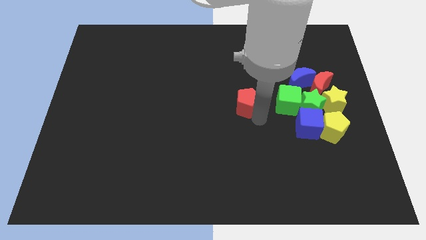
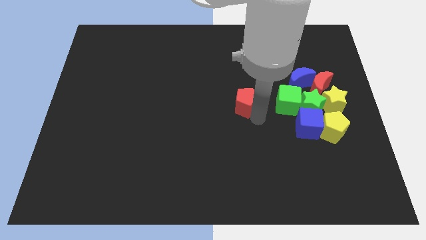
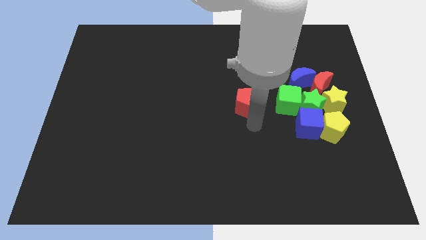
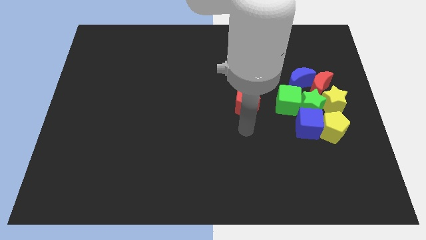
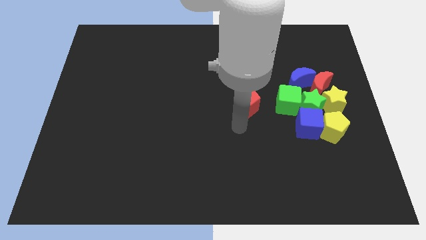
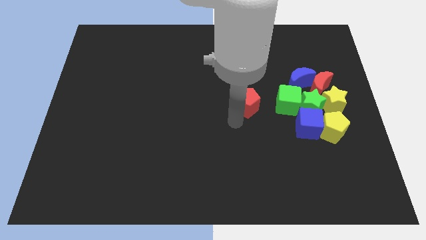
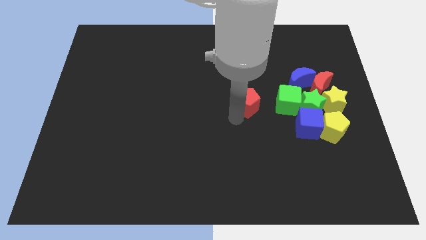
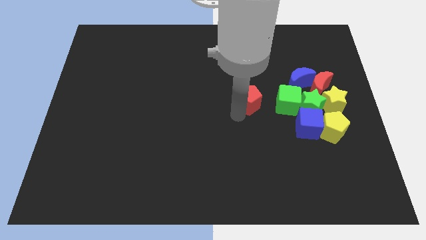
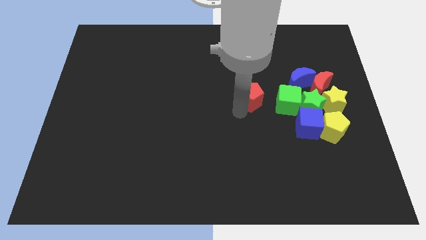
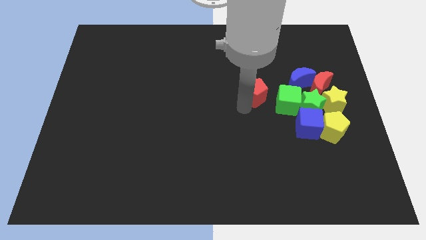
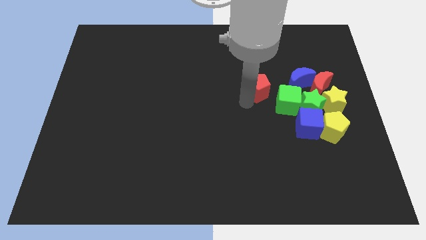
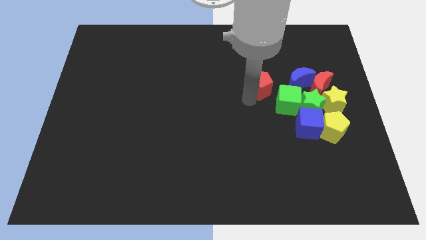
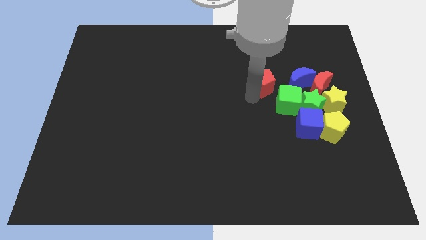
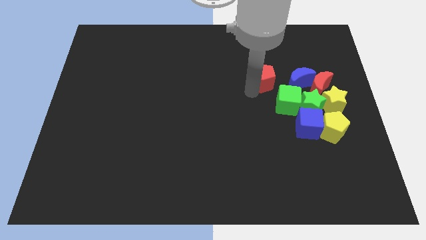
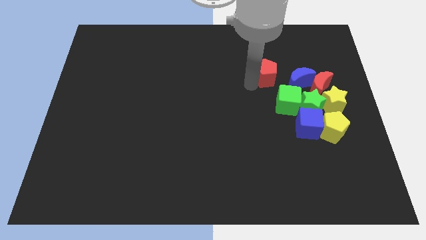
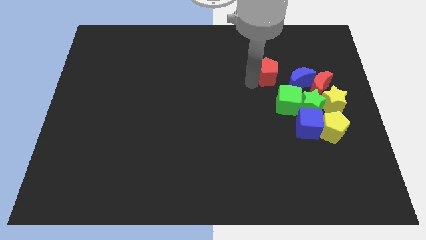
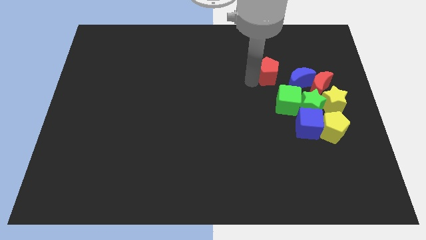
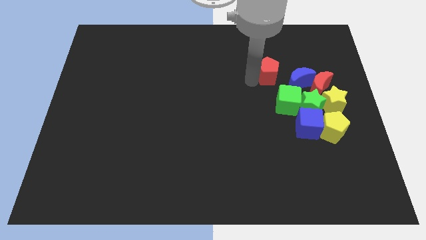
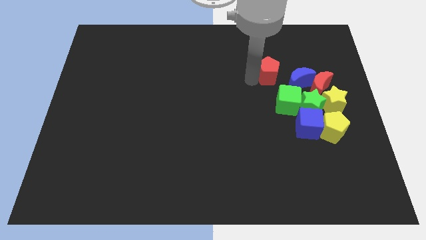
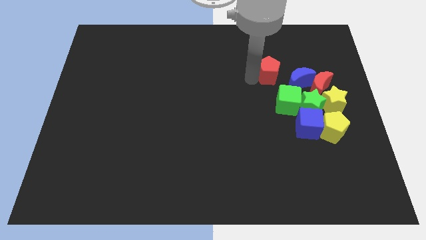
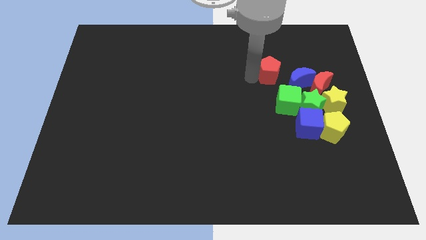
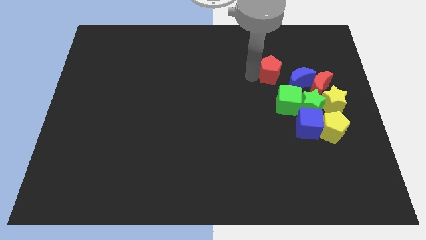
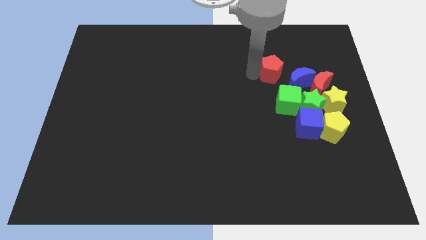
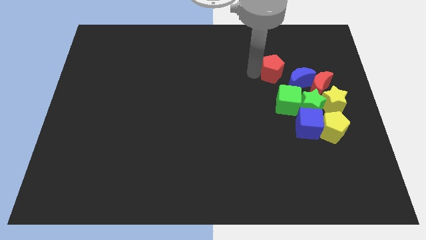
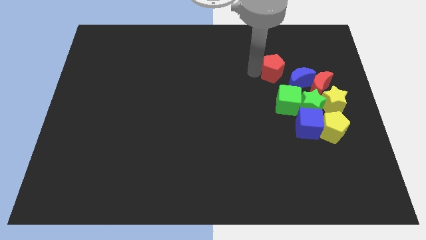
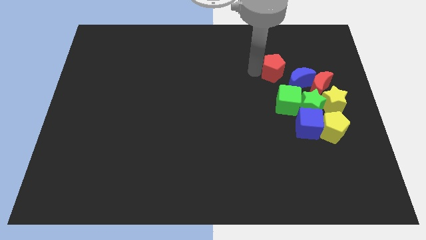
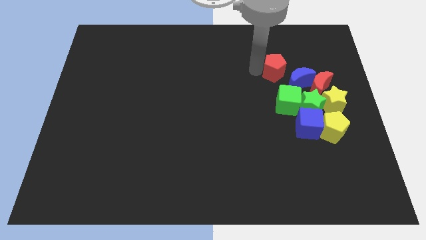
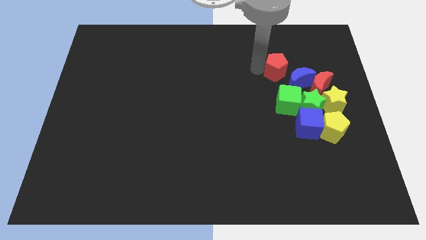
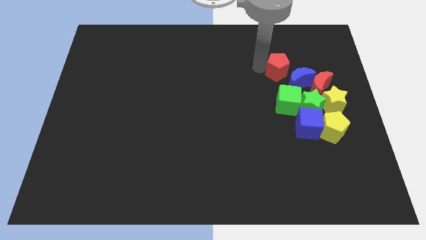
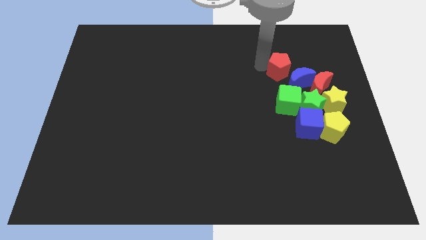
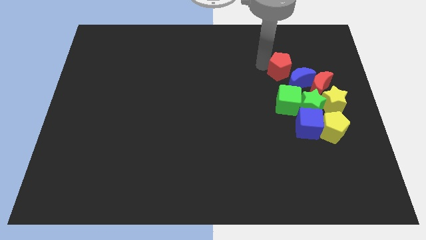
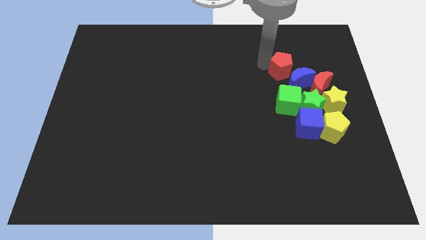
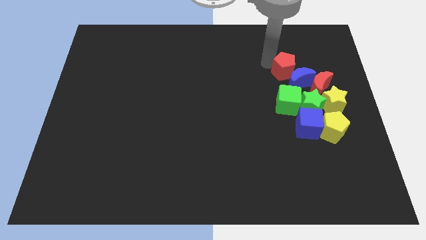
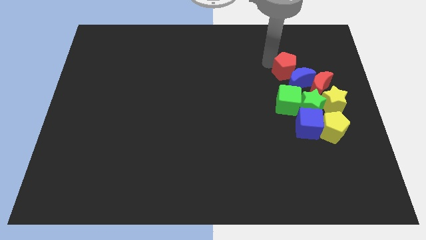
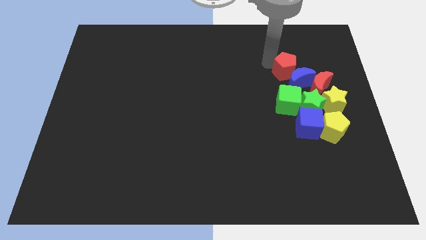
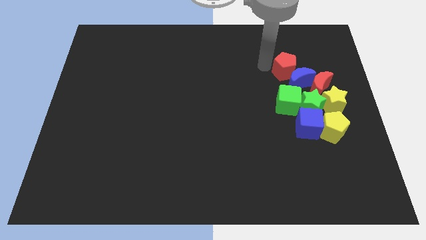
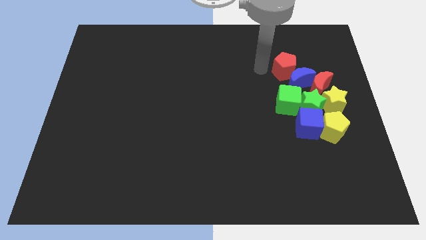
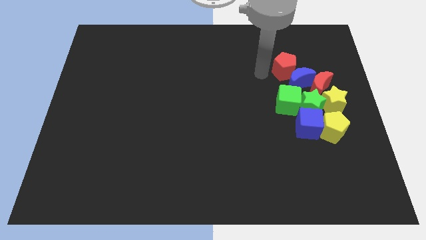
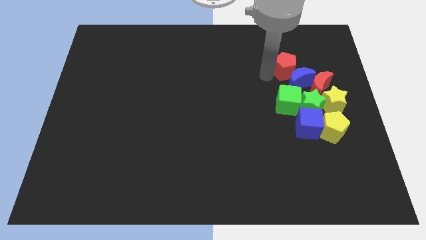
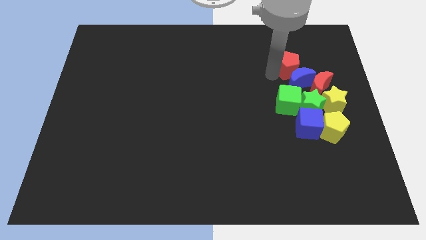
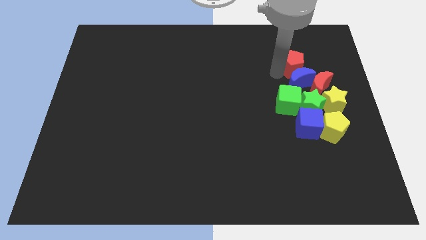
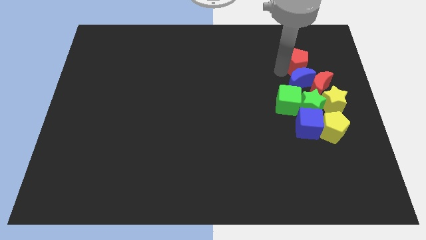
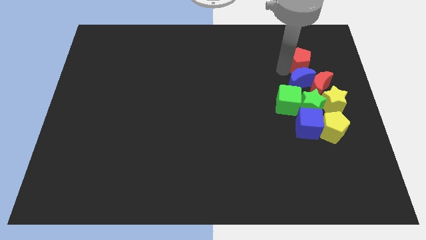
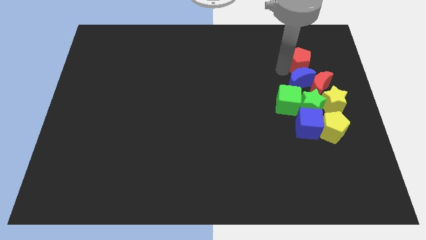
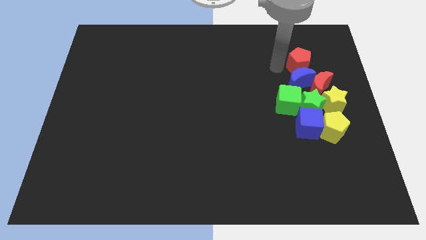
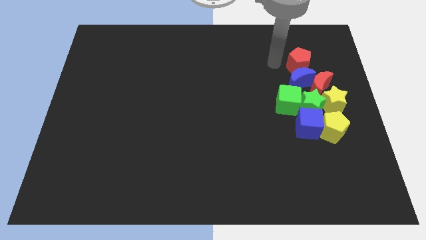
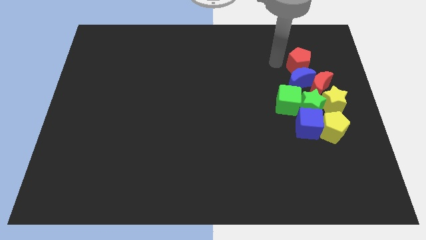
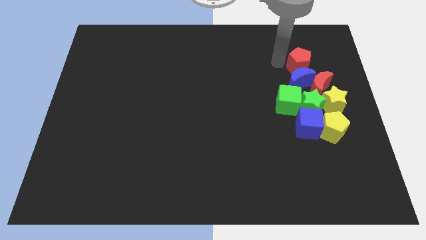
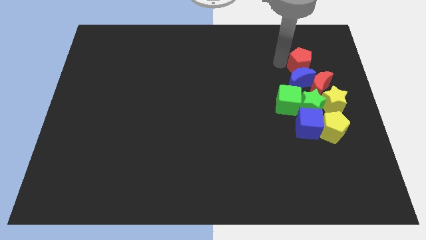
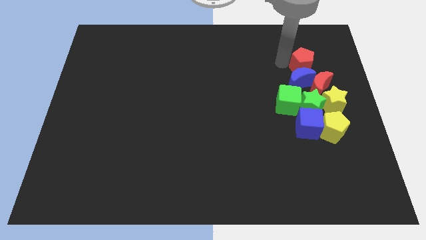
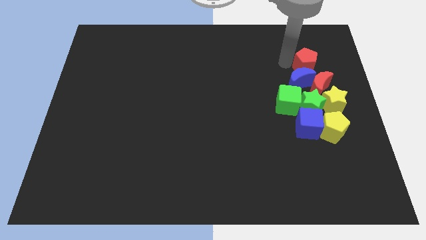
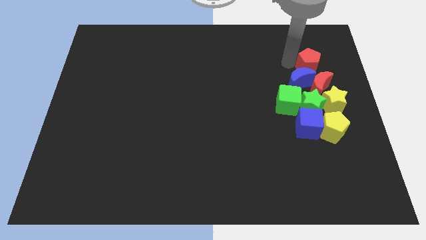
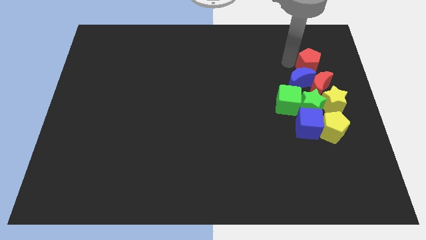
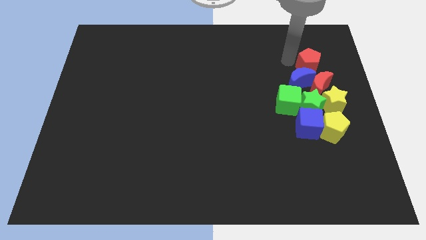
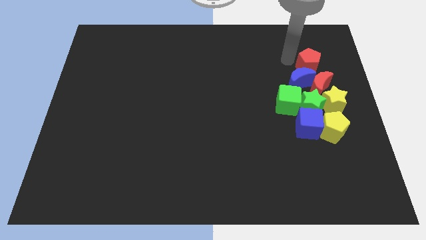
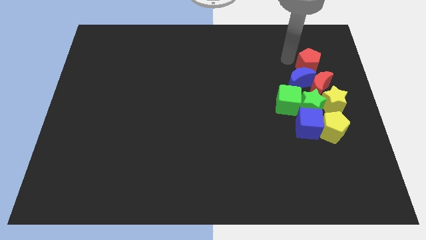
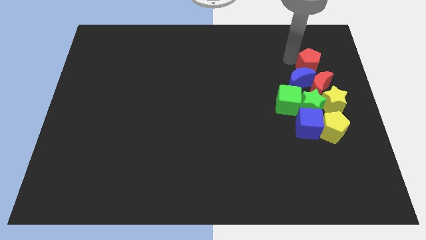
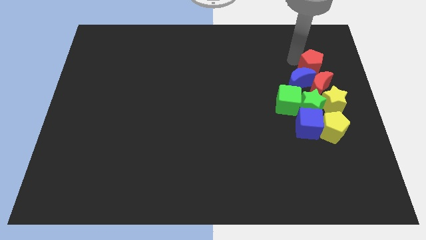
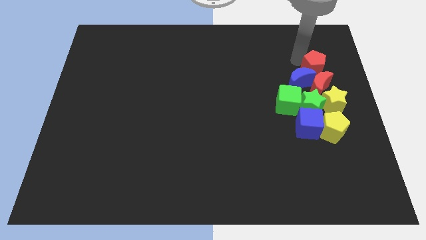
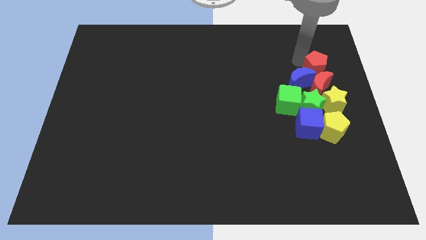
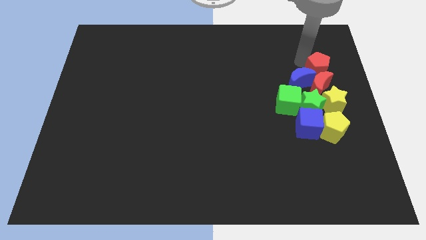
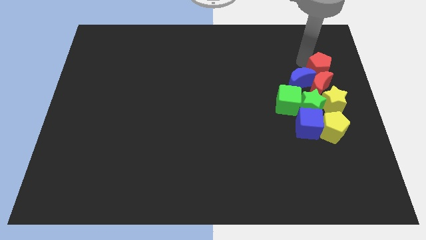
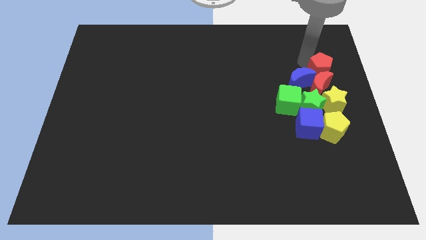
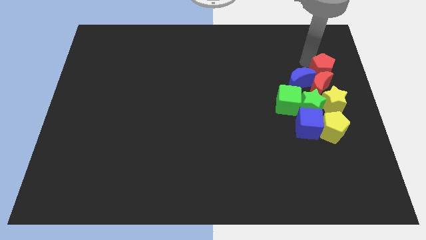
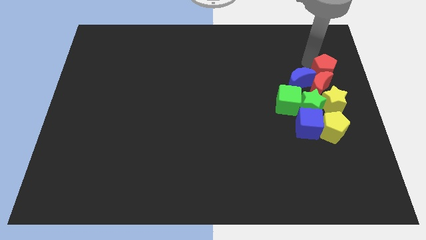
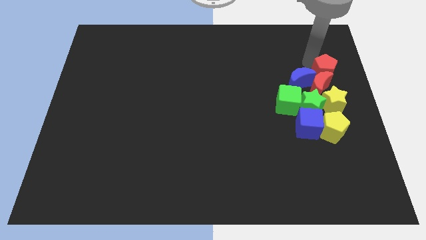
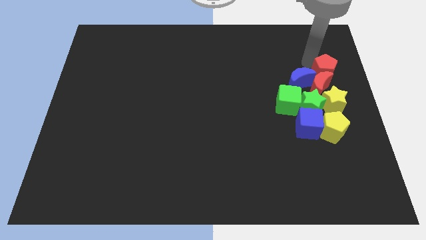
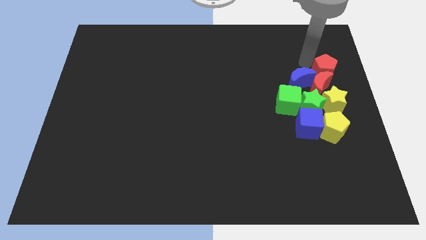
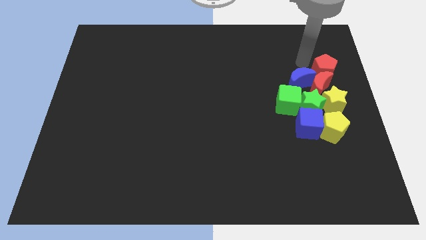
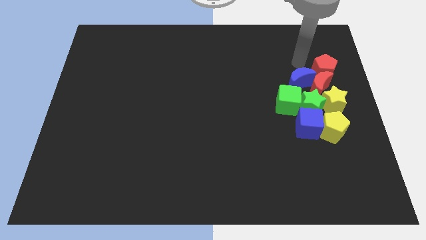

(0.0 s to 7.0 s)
move the red pentagon towards the top right side of the board

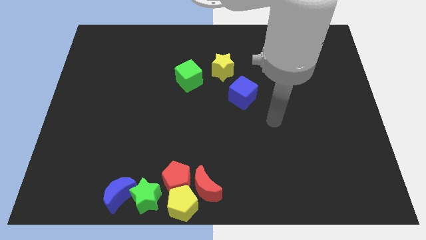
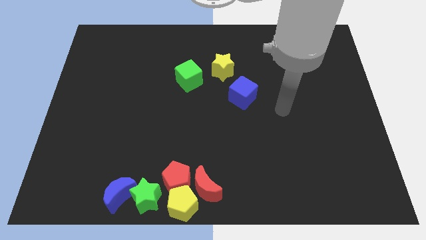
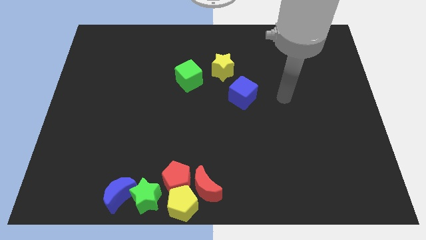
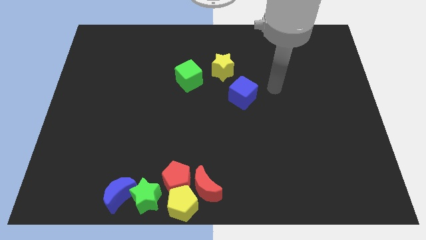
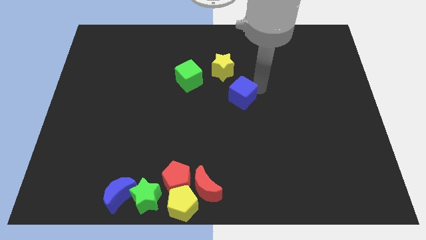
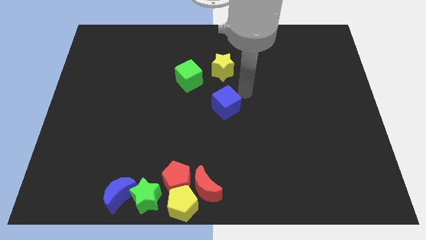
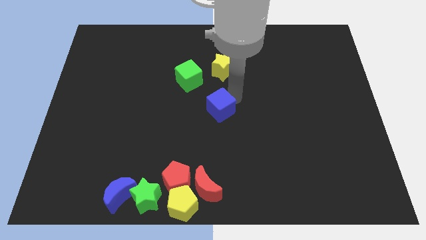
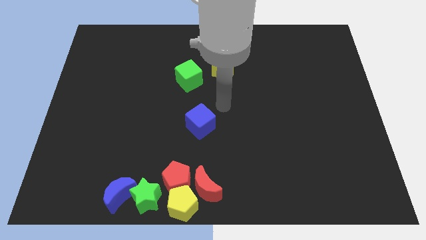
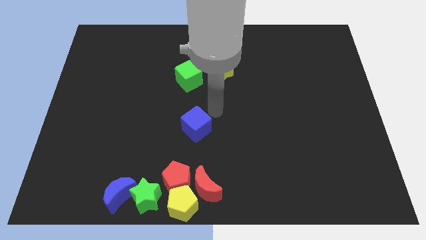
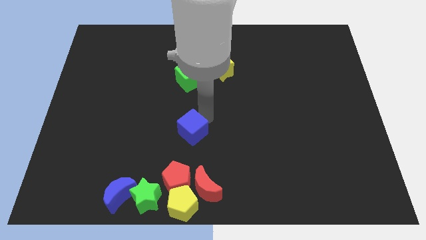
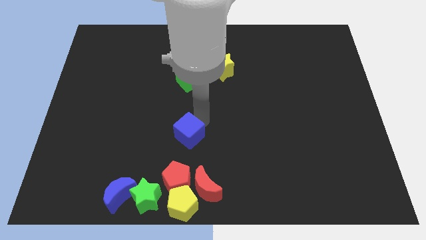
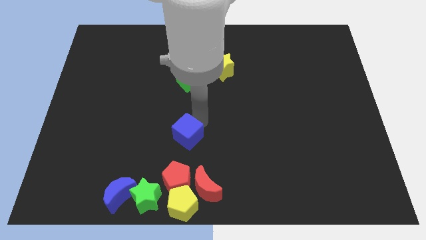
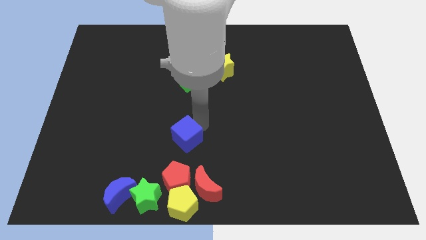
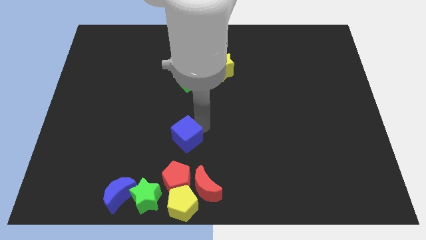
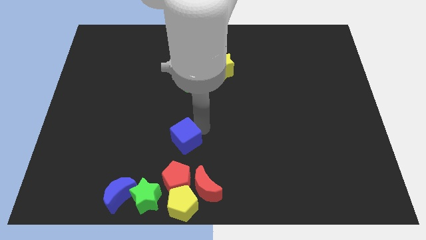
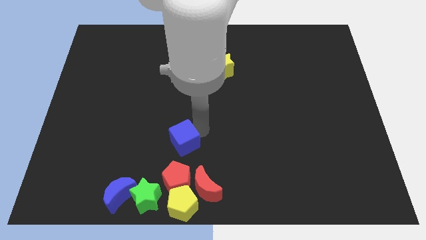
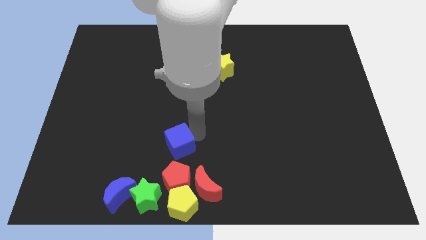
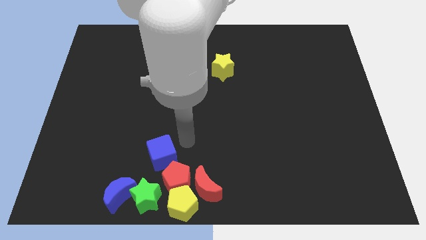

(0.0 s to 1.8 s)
place the blue cube above the red pentagon

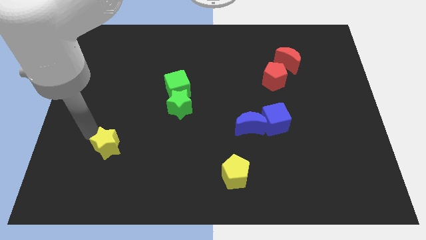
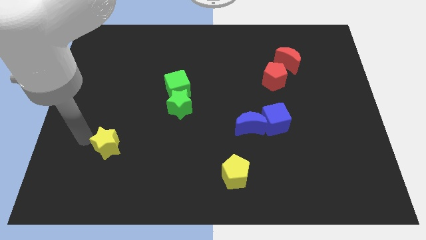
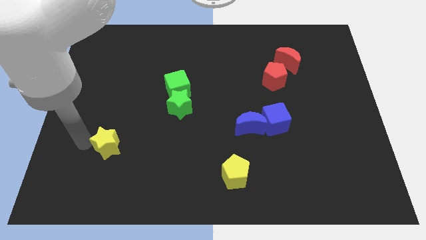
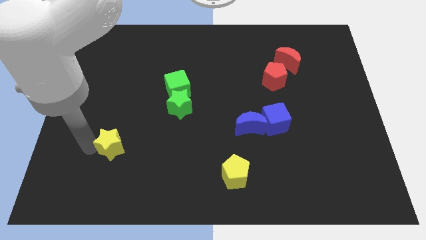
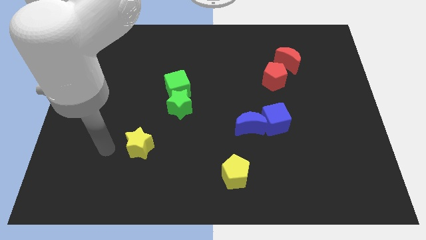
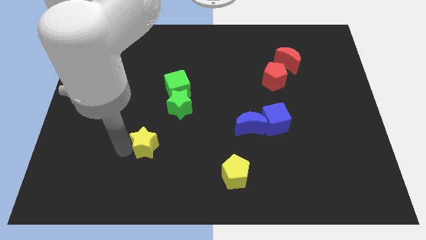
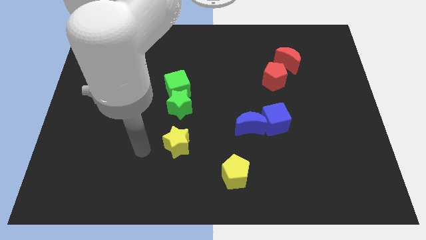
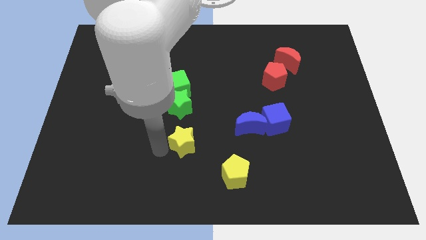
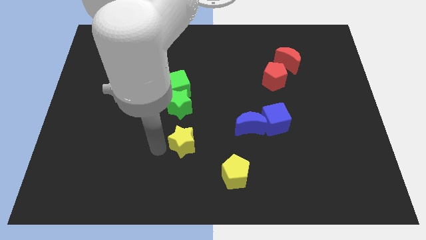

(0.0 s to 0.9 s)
push yellow star below green star
